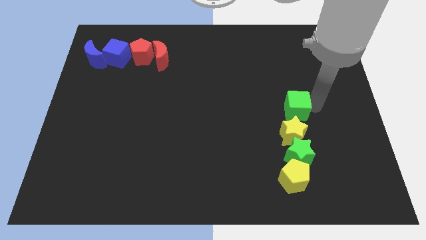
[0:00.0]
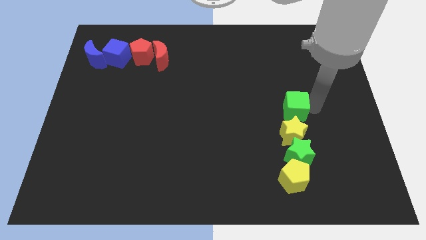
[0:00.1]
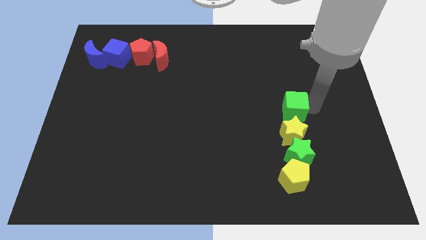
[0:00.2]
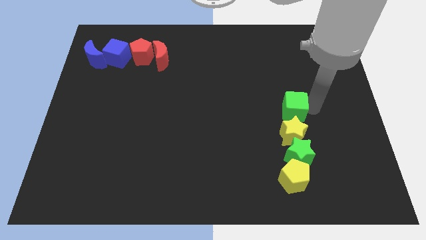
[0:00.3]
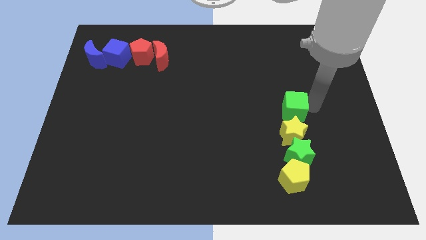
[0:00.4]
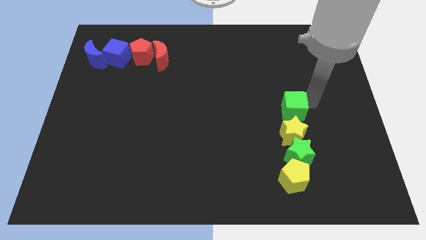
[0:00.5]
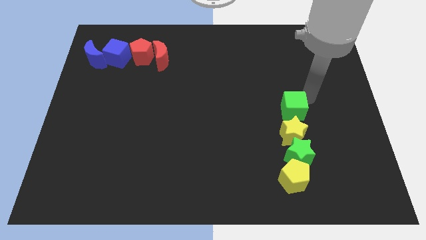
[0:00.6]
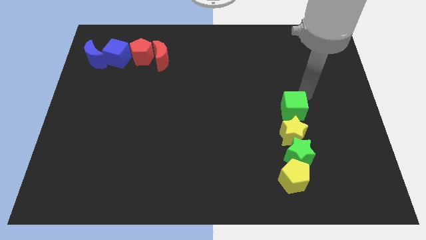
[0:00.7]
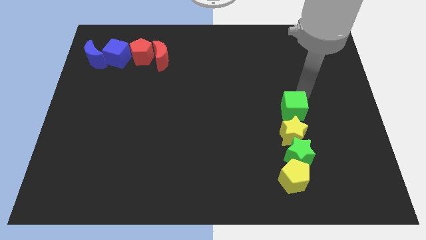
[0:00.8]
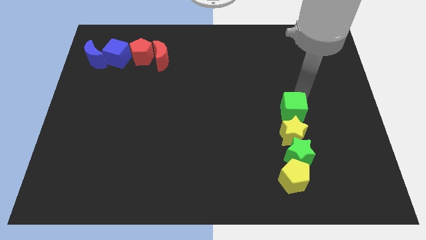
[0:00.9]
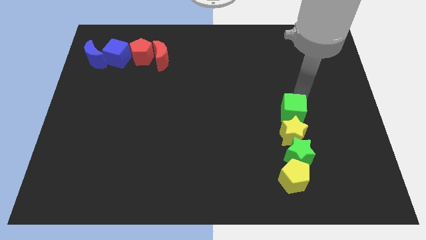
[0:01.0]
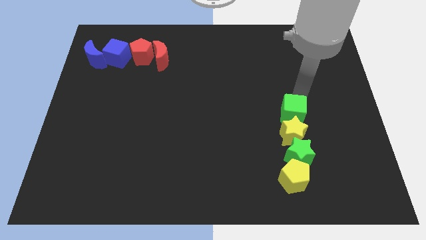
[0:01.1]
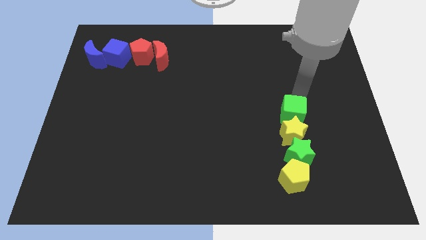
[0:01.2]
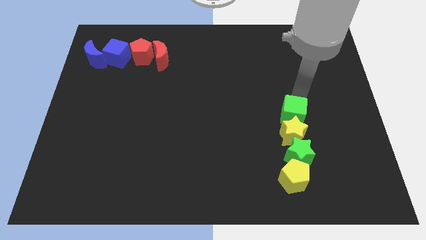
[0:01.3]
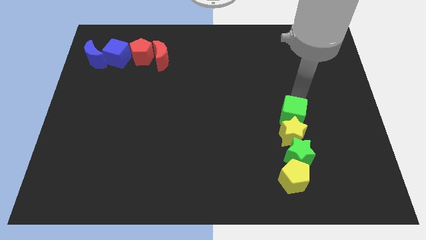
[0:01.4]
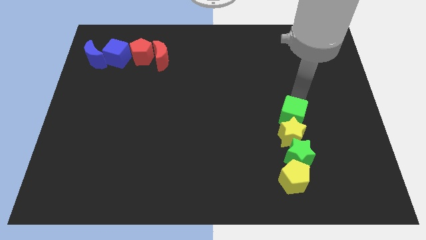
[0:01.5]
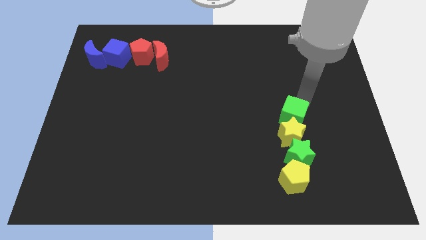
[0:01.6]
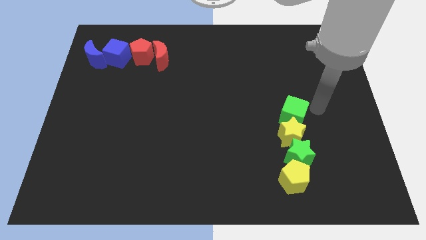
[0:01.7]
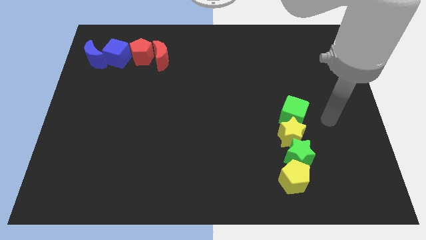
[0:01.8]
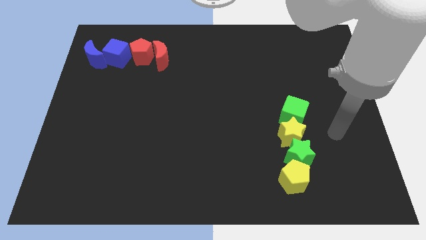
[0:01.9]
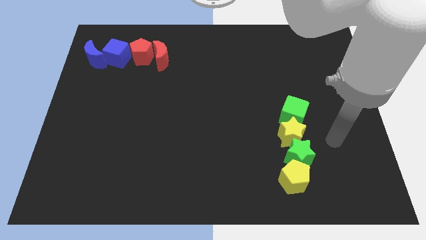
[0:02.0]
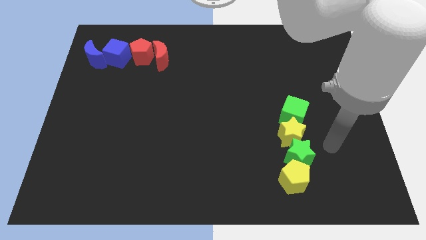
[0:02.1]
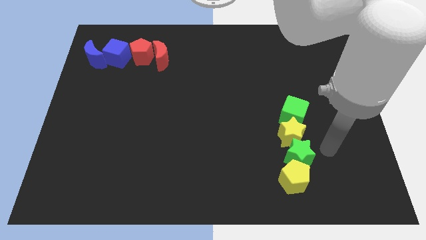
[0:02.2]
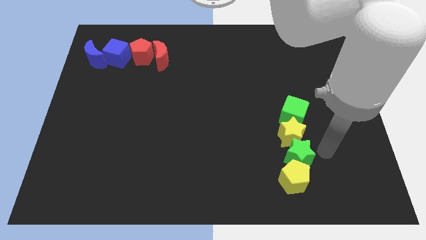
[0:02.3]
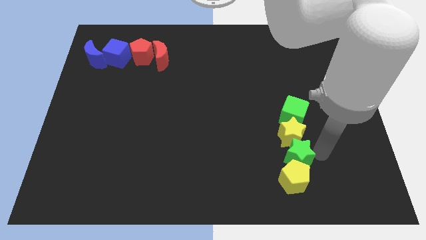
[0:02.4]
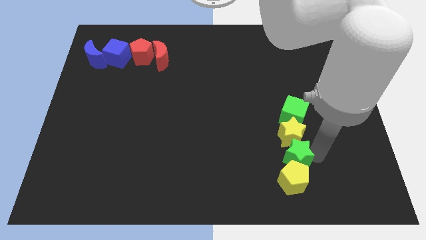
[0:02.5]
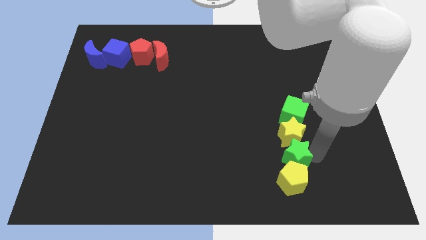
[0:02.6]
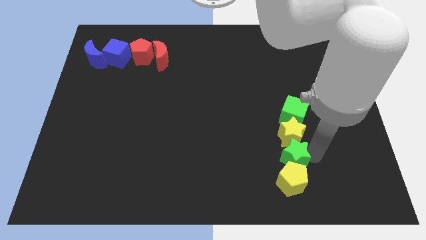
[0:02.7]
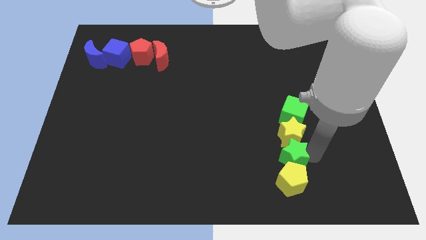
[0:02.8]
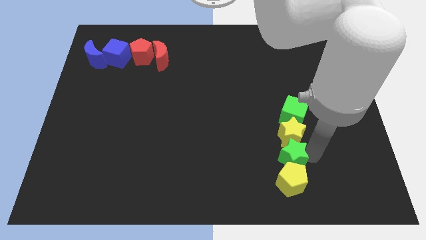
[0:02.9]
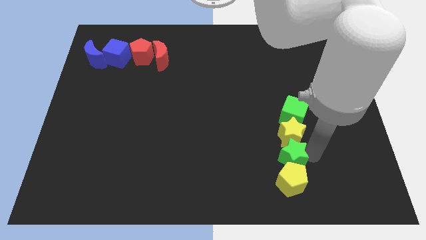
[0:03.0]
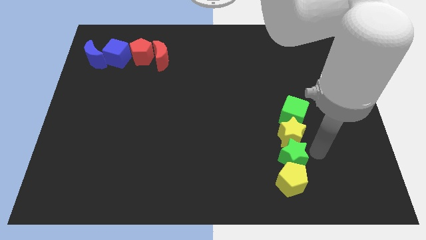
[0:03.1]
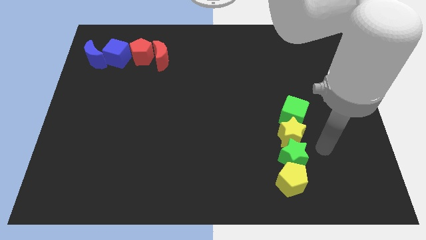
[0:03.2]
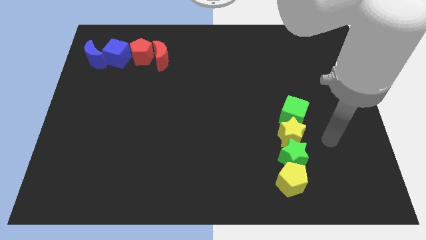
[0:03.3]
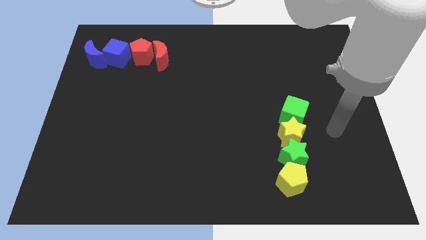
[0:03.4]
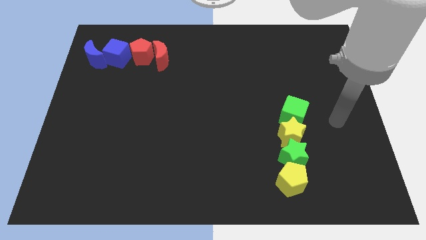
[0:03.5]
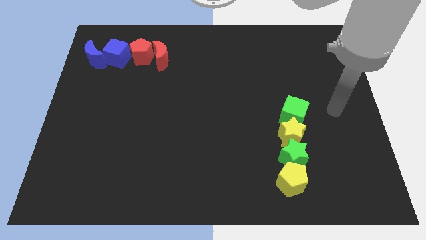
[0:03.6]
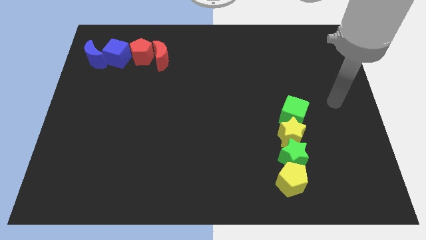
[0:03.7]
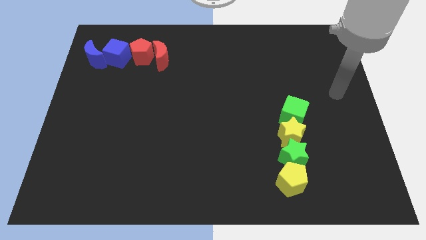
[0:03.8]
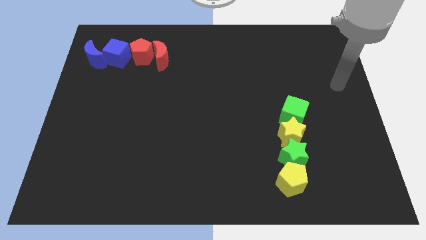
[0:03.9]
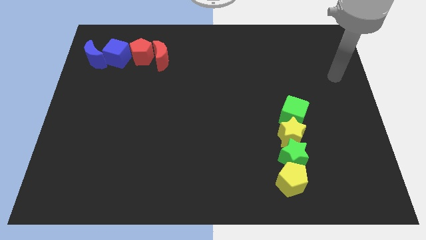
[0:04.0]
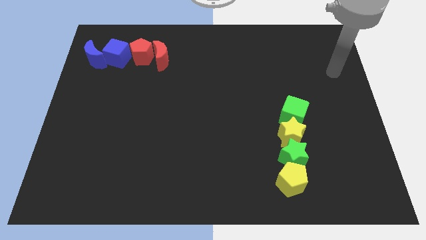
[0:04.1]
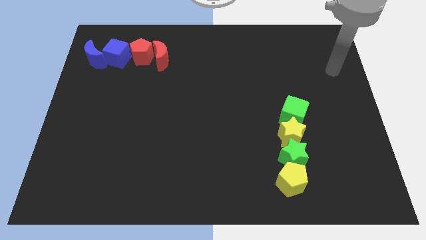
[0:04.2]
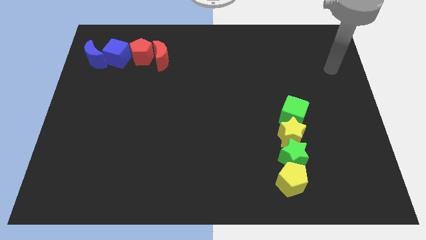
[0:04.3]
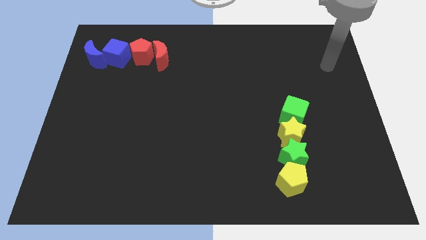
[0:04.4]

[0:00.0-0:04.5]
adjust green blocks to form a vertical line with yellow blocks

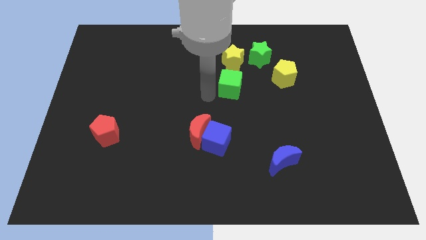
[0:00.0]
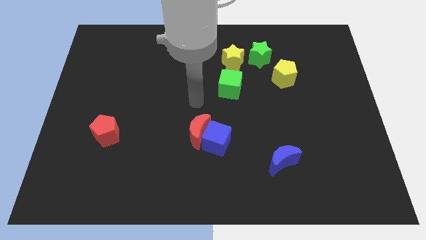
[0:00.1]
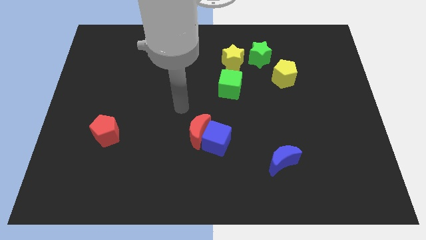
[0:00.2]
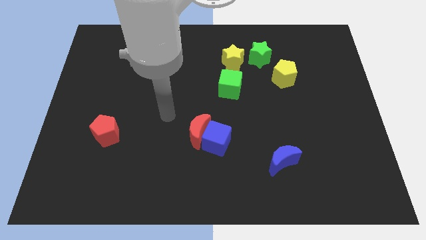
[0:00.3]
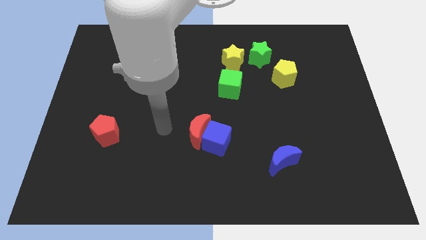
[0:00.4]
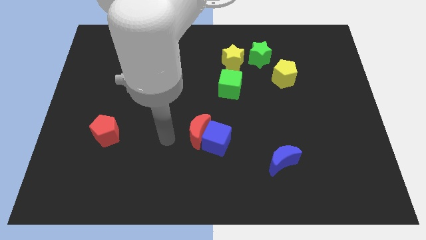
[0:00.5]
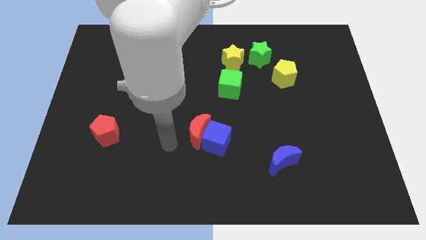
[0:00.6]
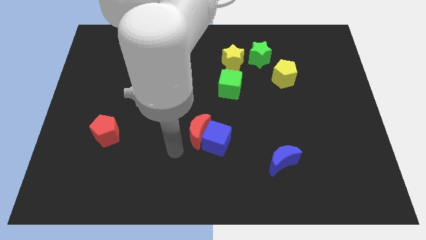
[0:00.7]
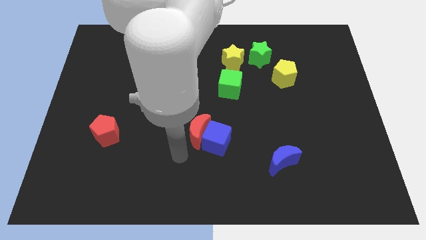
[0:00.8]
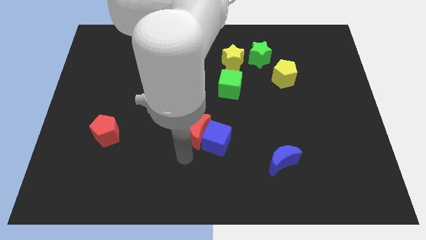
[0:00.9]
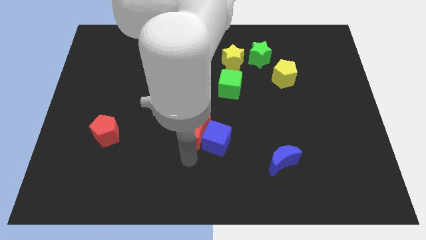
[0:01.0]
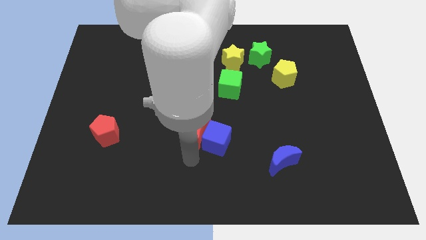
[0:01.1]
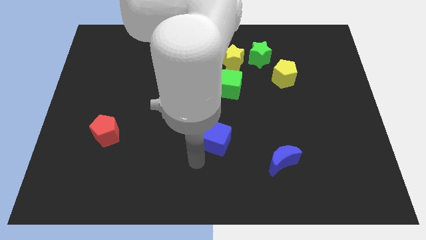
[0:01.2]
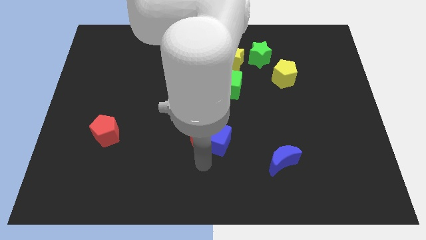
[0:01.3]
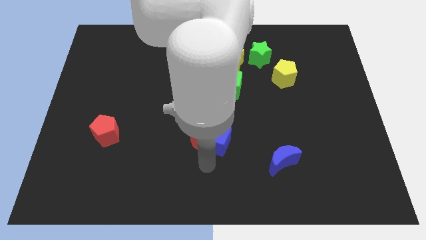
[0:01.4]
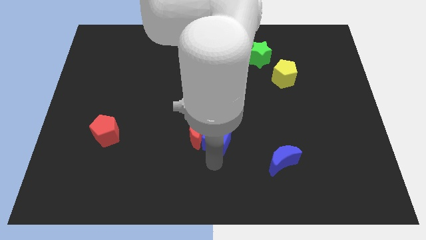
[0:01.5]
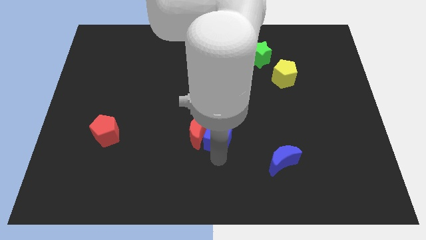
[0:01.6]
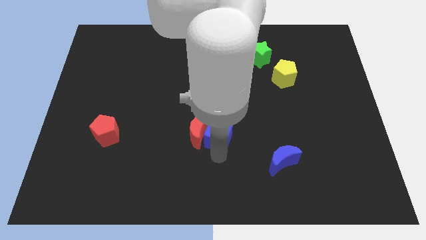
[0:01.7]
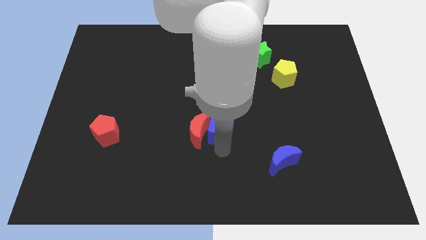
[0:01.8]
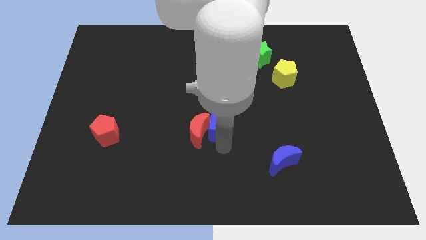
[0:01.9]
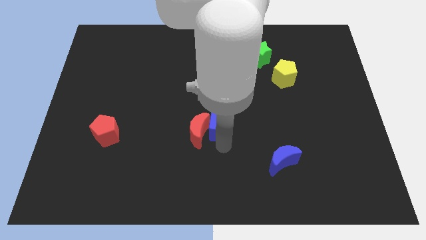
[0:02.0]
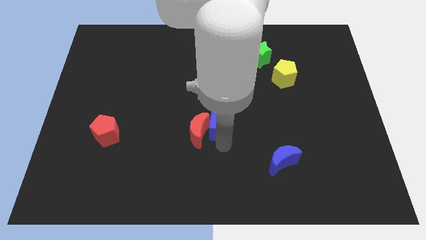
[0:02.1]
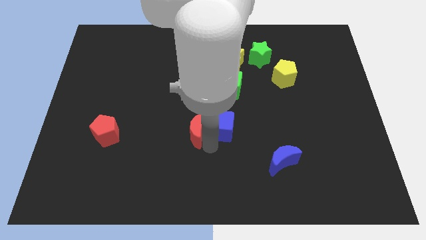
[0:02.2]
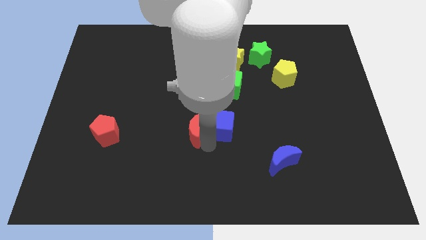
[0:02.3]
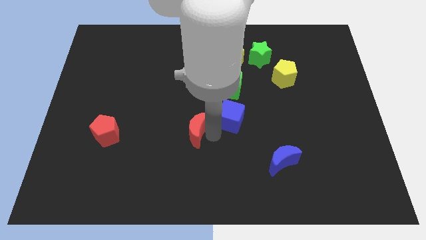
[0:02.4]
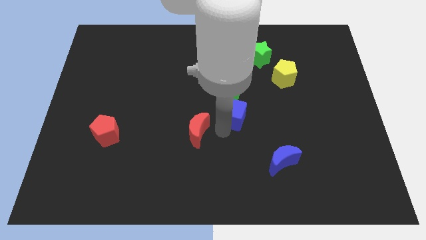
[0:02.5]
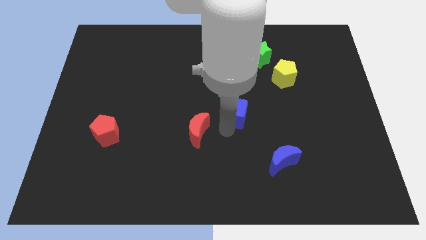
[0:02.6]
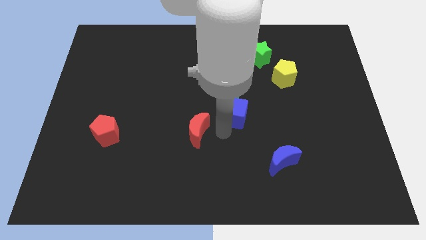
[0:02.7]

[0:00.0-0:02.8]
push the blue cube slightly to the top

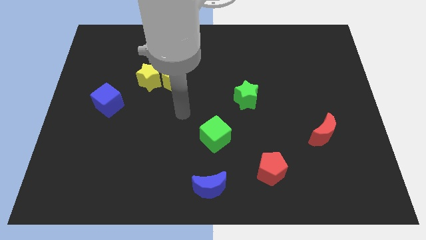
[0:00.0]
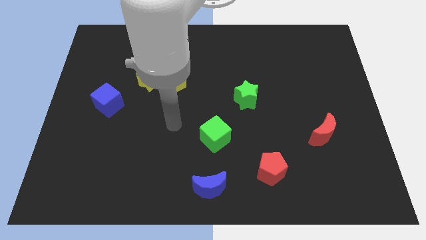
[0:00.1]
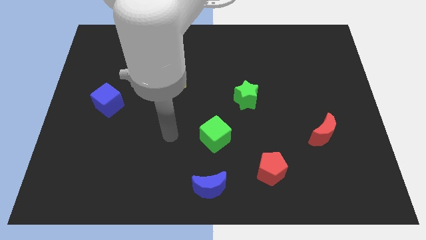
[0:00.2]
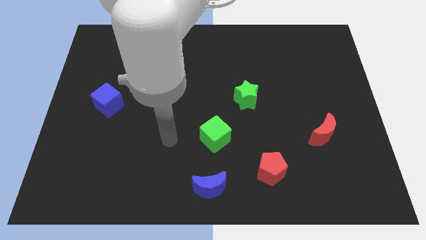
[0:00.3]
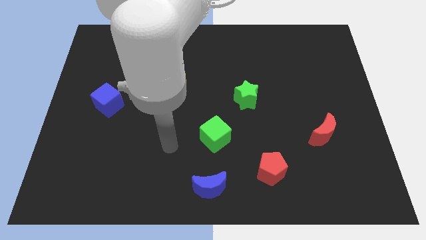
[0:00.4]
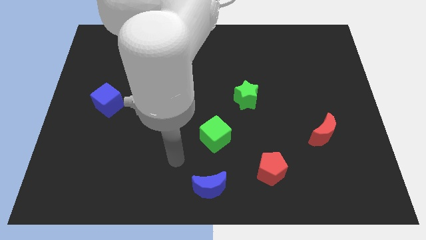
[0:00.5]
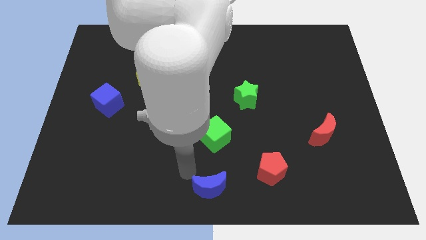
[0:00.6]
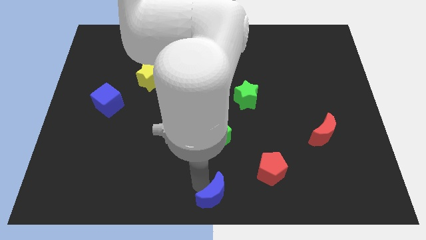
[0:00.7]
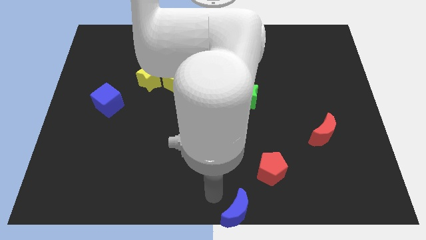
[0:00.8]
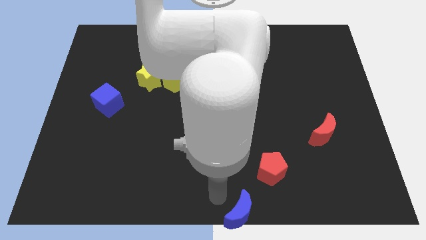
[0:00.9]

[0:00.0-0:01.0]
put blue moon in the bottom center

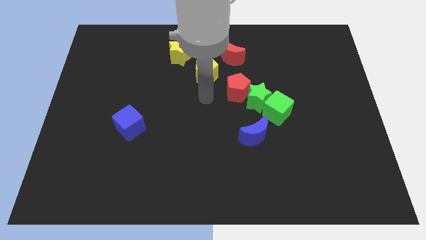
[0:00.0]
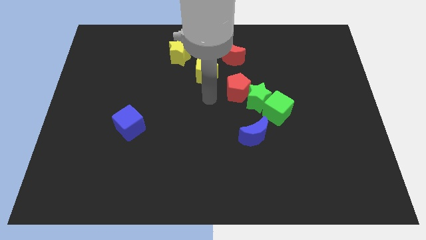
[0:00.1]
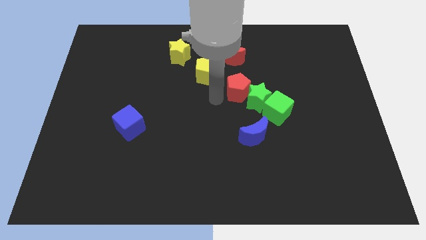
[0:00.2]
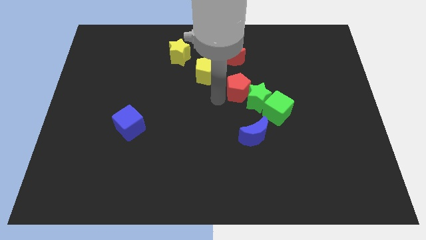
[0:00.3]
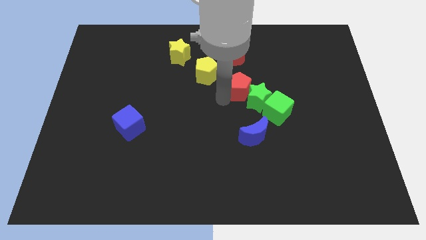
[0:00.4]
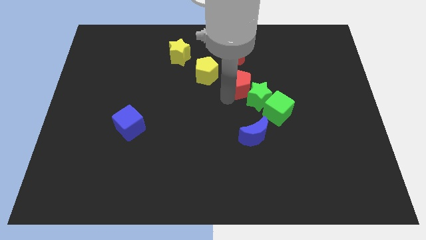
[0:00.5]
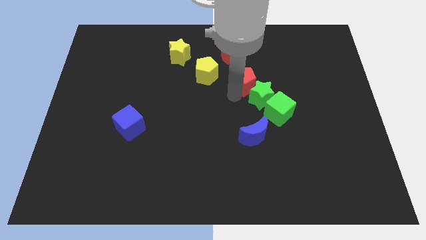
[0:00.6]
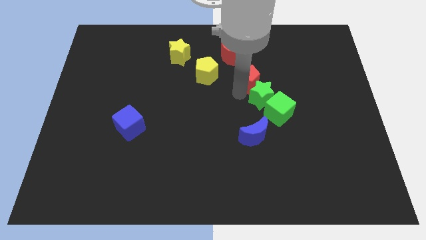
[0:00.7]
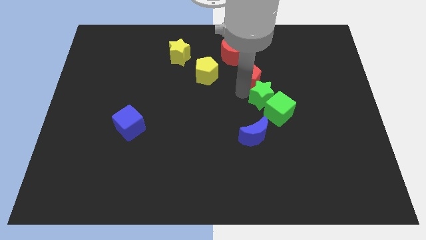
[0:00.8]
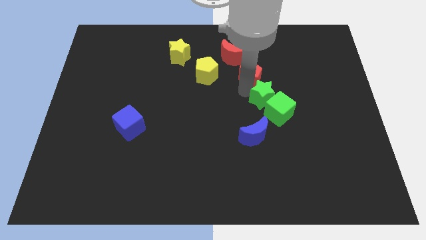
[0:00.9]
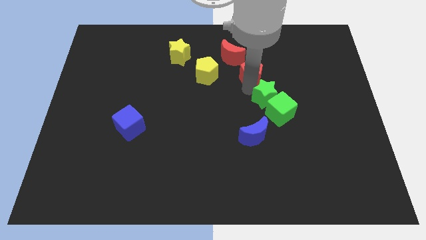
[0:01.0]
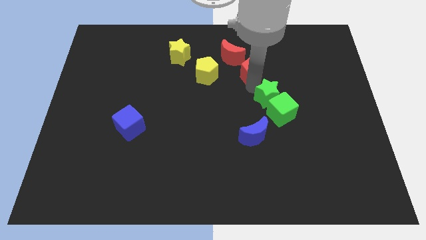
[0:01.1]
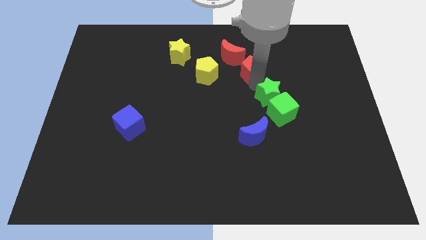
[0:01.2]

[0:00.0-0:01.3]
push the red pentagon to the right side of the yellow pentagon
